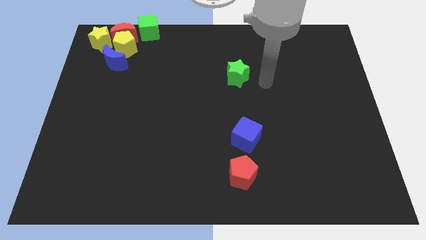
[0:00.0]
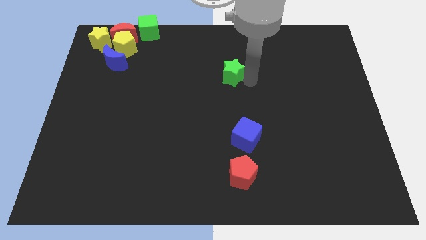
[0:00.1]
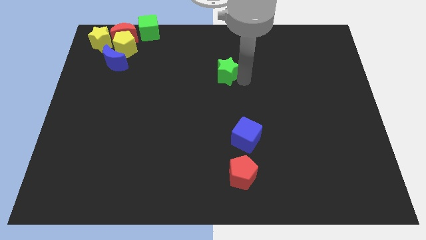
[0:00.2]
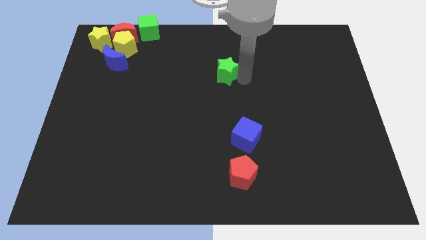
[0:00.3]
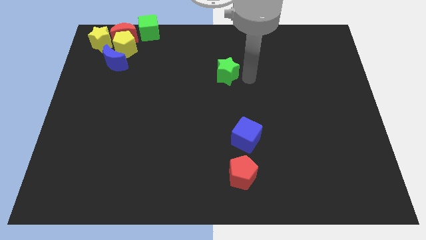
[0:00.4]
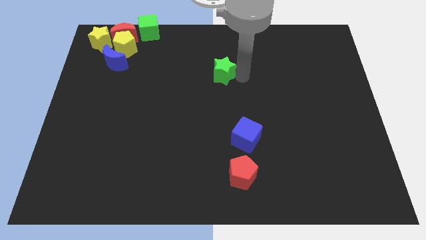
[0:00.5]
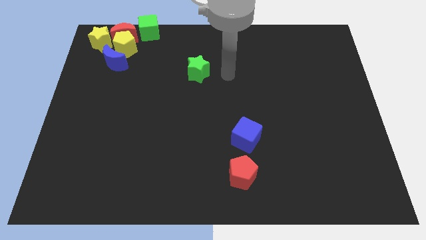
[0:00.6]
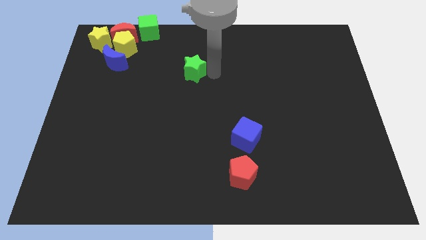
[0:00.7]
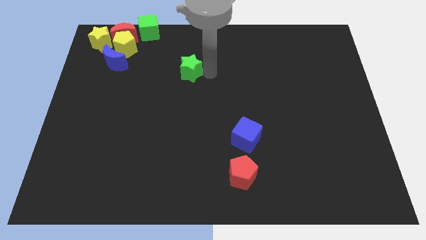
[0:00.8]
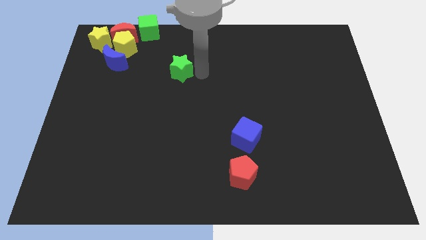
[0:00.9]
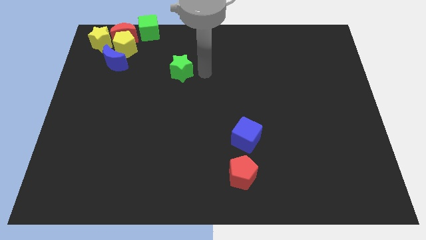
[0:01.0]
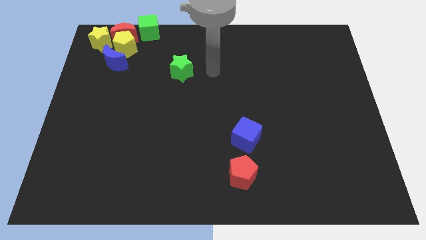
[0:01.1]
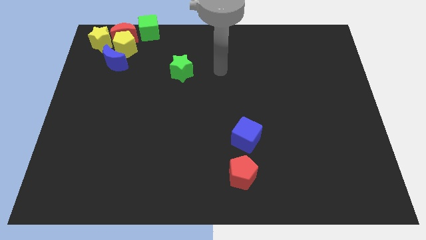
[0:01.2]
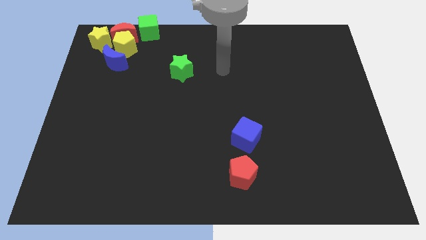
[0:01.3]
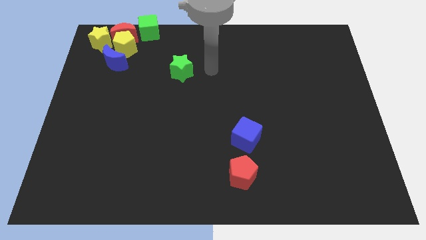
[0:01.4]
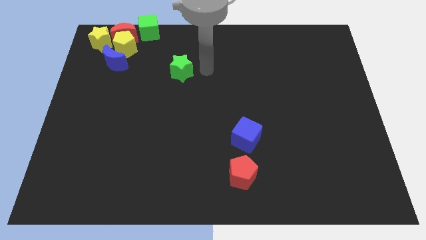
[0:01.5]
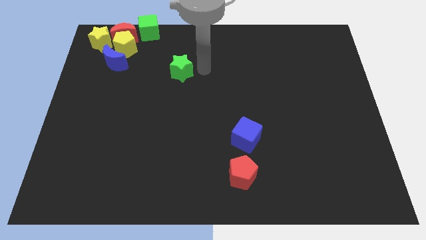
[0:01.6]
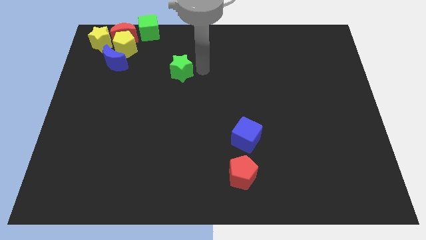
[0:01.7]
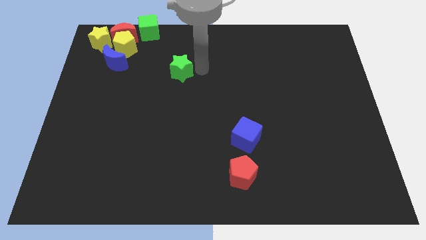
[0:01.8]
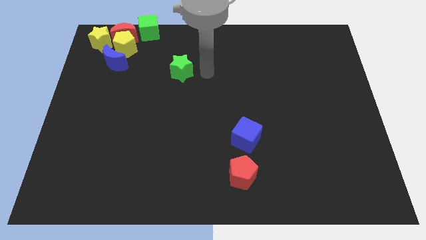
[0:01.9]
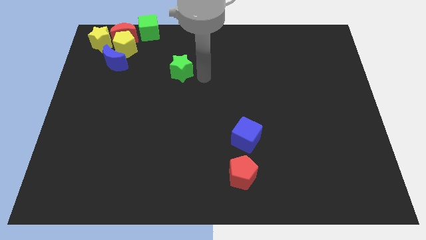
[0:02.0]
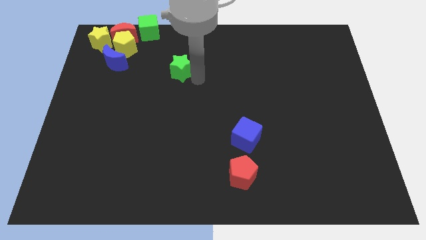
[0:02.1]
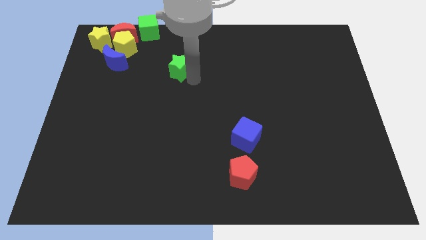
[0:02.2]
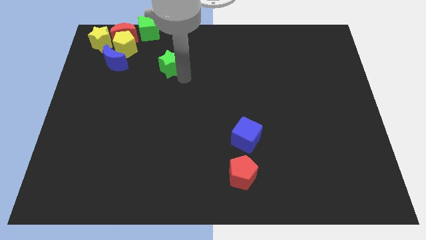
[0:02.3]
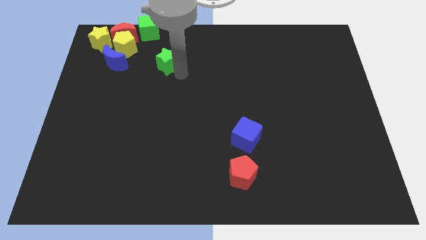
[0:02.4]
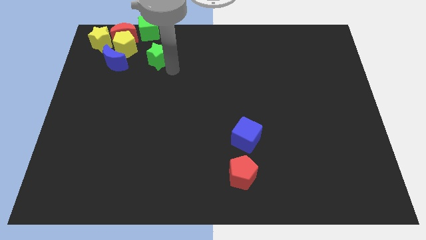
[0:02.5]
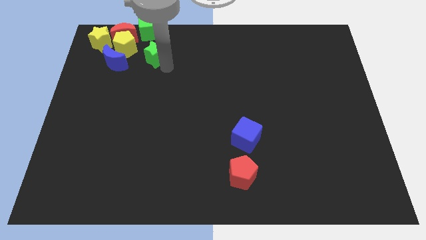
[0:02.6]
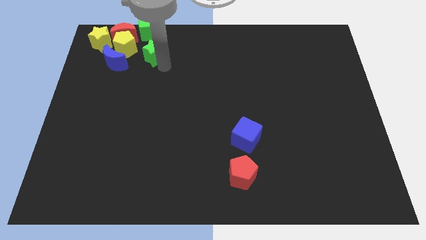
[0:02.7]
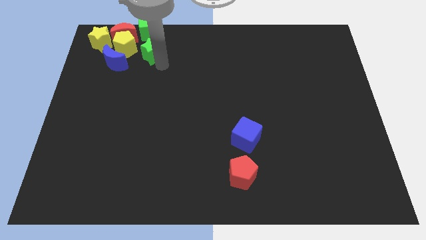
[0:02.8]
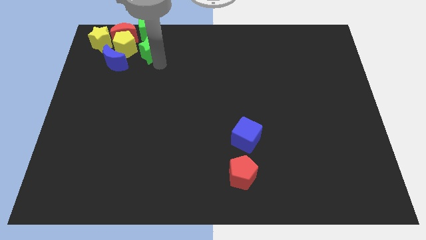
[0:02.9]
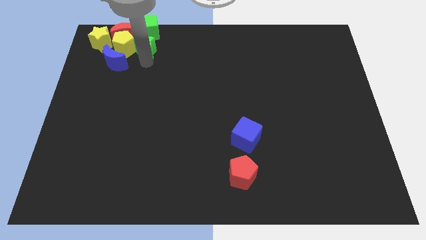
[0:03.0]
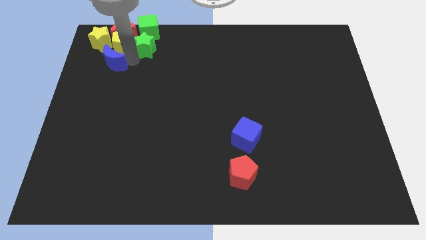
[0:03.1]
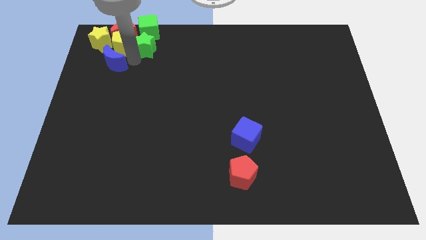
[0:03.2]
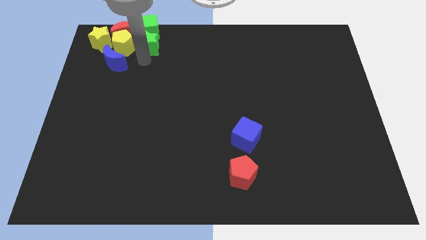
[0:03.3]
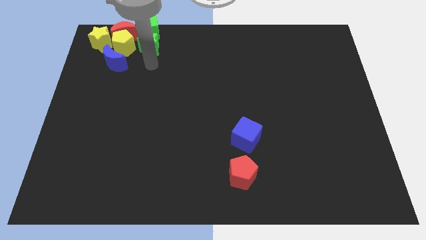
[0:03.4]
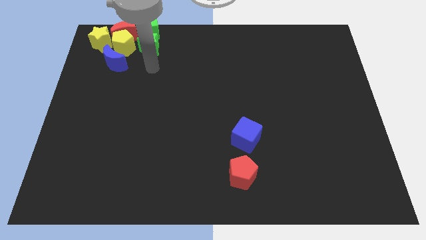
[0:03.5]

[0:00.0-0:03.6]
place the green star at the bottomside of the green cube

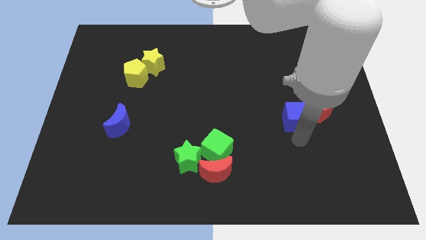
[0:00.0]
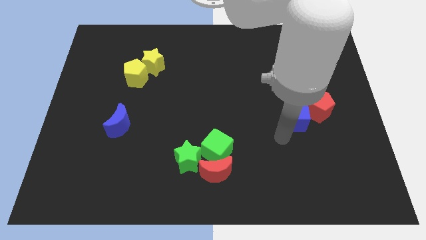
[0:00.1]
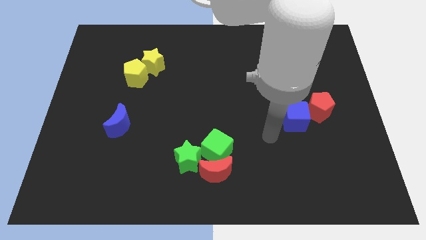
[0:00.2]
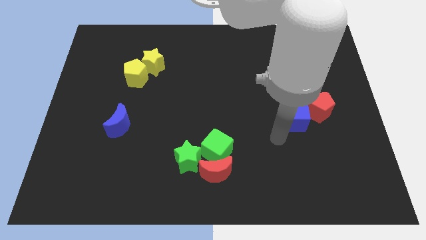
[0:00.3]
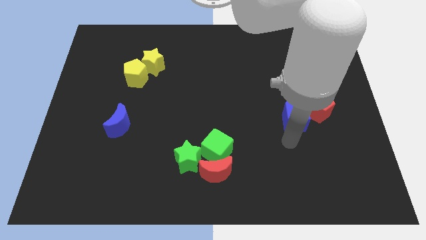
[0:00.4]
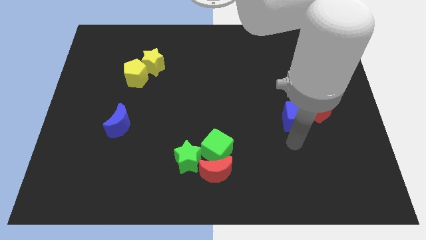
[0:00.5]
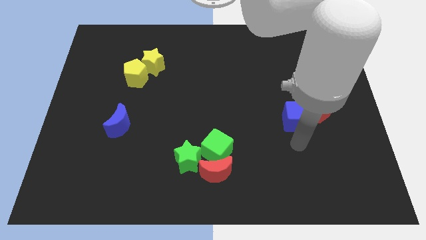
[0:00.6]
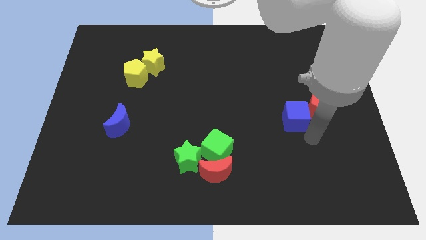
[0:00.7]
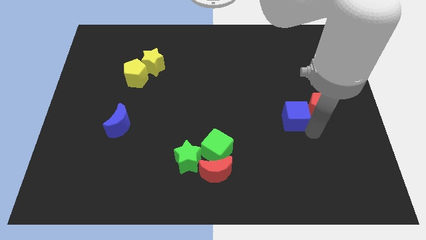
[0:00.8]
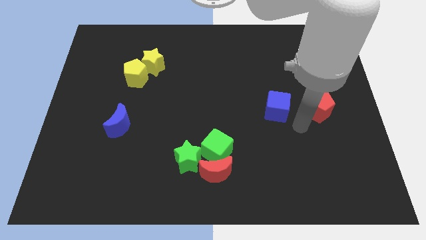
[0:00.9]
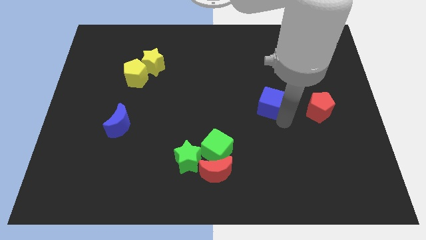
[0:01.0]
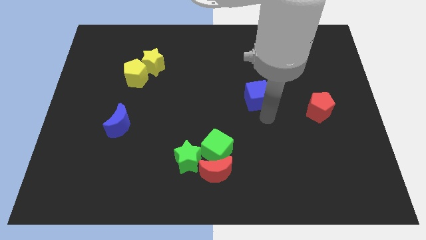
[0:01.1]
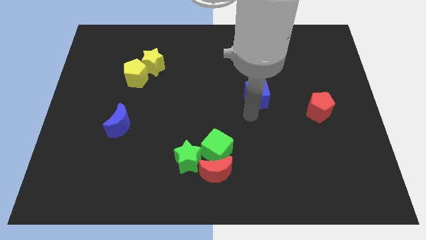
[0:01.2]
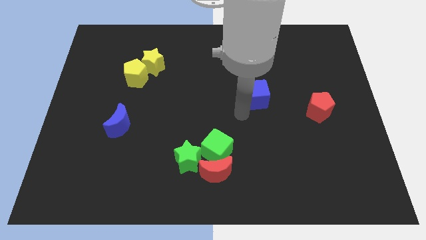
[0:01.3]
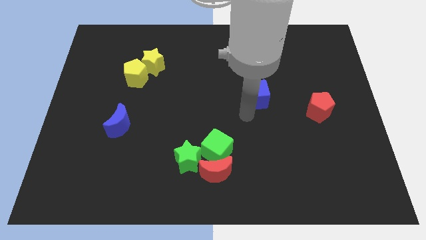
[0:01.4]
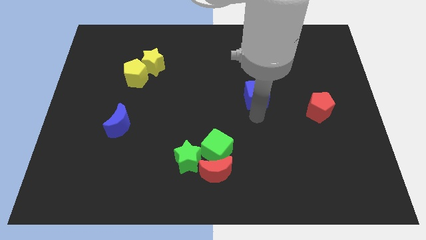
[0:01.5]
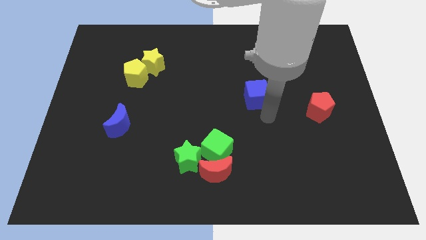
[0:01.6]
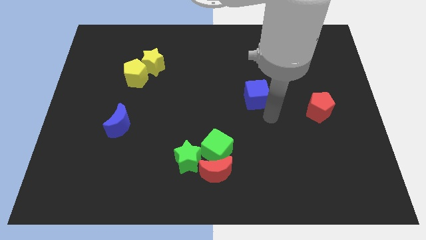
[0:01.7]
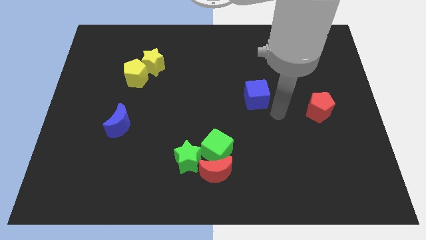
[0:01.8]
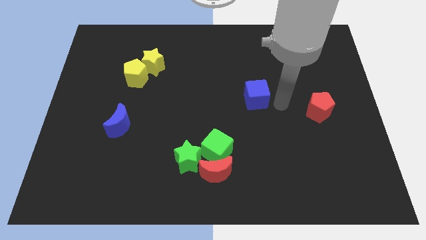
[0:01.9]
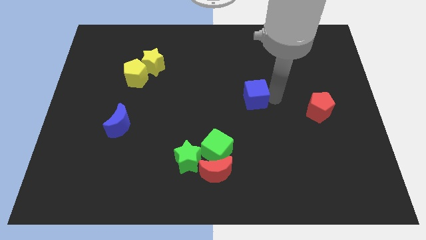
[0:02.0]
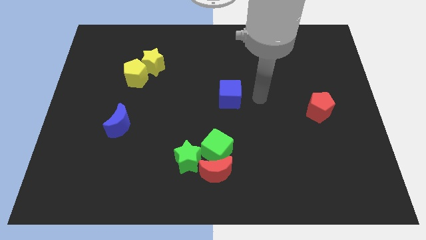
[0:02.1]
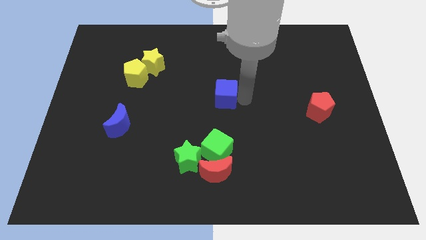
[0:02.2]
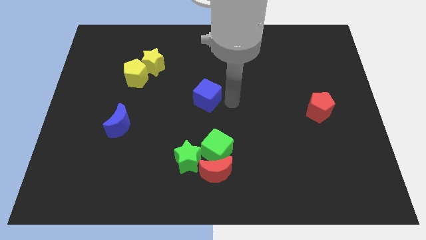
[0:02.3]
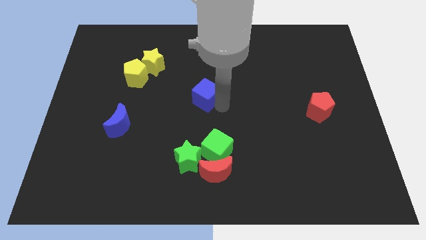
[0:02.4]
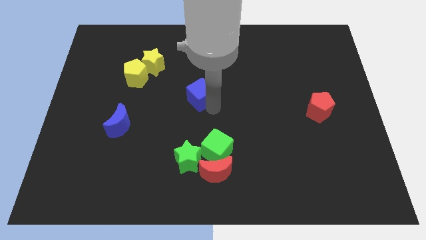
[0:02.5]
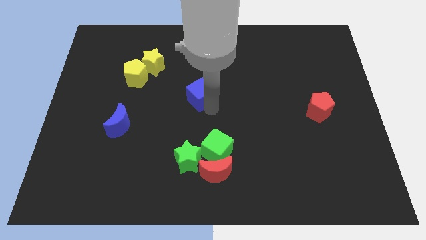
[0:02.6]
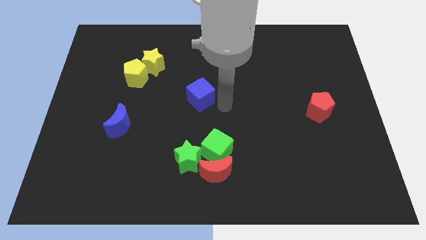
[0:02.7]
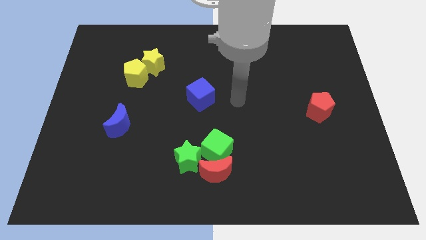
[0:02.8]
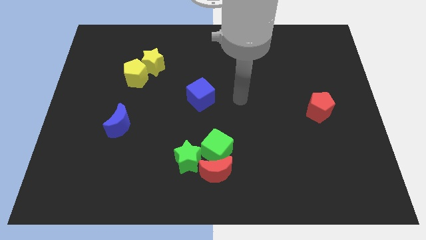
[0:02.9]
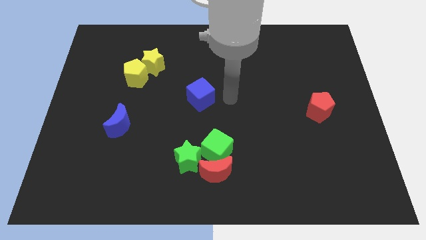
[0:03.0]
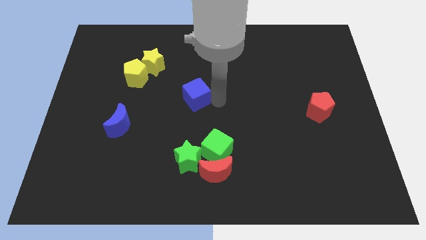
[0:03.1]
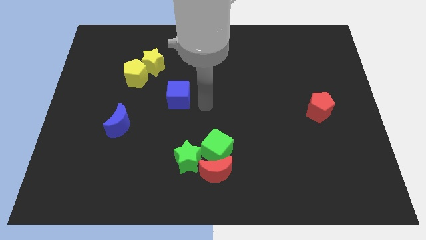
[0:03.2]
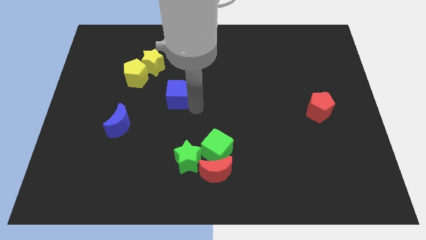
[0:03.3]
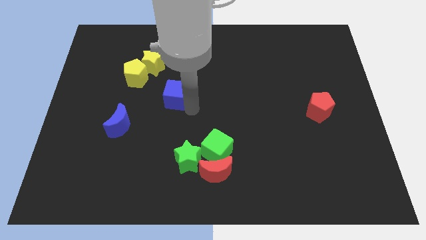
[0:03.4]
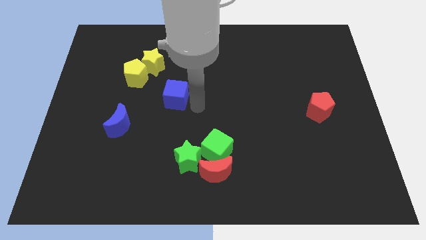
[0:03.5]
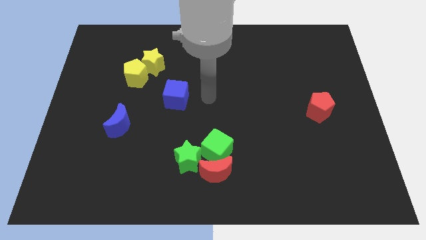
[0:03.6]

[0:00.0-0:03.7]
move the blue cube above green blocks

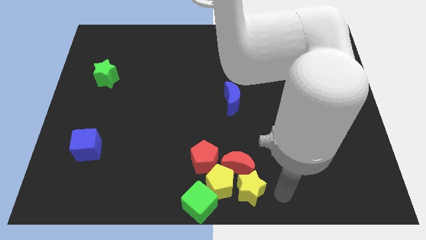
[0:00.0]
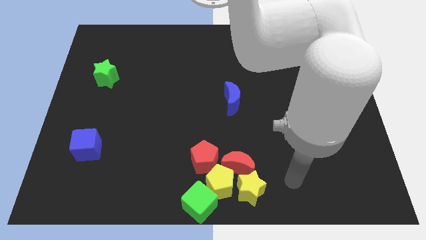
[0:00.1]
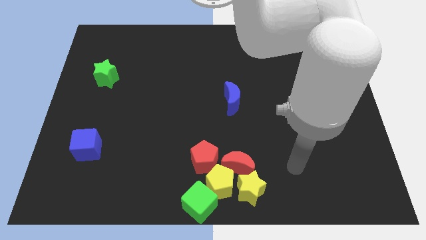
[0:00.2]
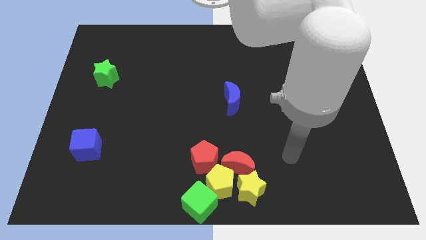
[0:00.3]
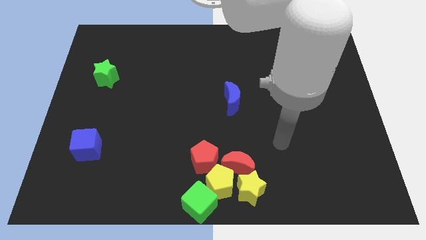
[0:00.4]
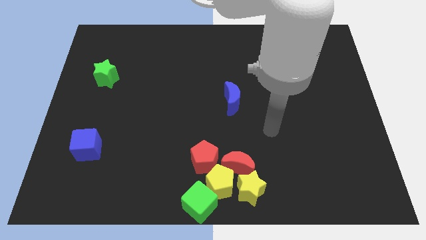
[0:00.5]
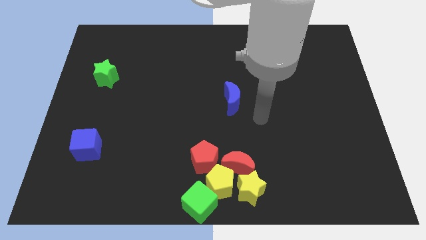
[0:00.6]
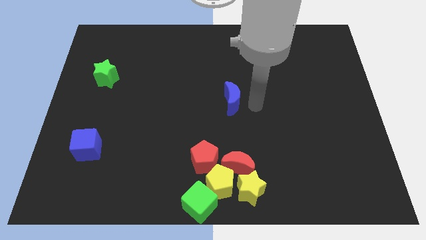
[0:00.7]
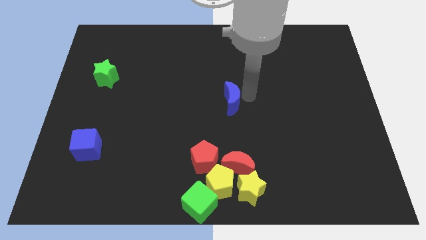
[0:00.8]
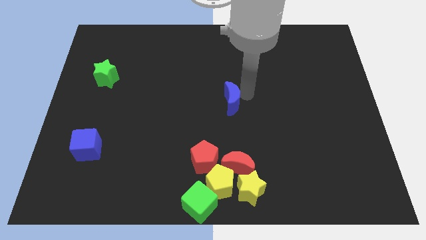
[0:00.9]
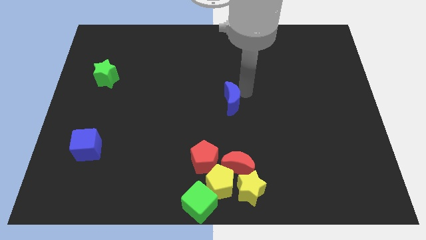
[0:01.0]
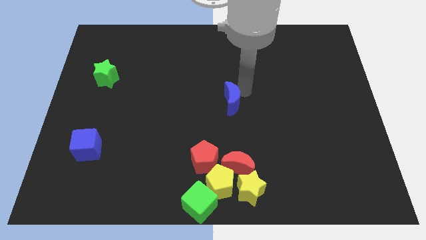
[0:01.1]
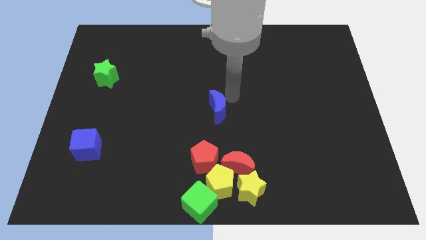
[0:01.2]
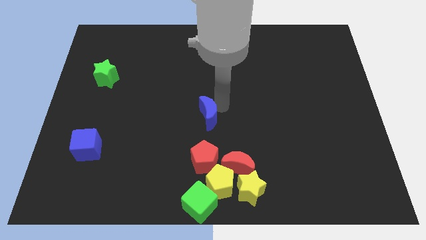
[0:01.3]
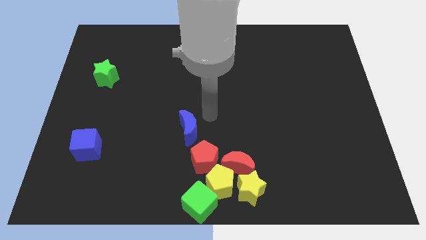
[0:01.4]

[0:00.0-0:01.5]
push the blue moon to the top left side of the red pentagon
